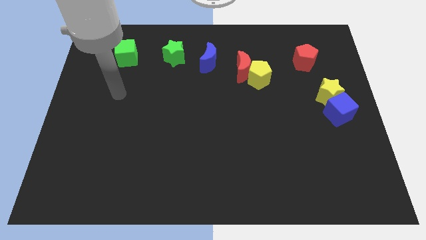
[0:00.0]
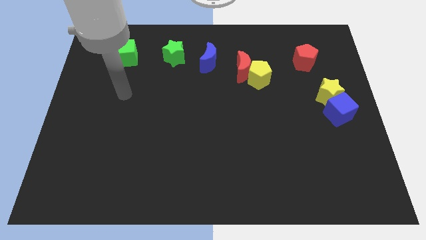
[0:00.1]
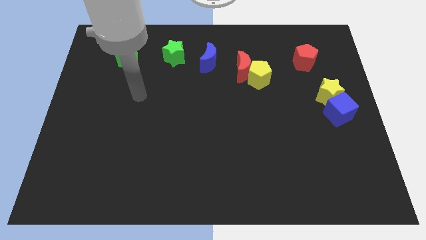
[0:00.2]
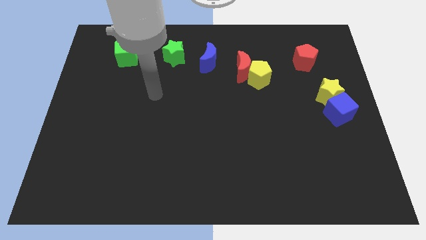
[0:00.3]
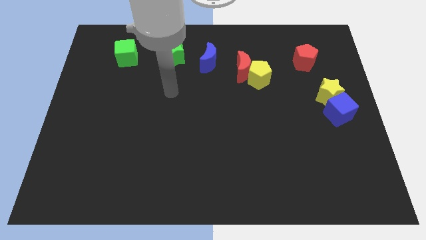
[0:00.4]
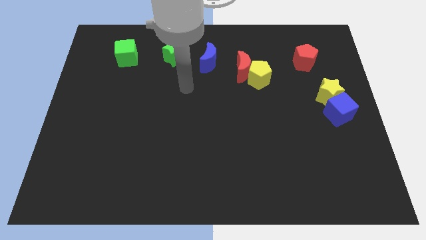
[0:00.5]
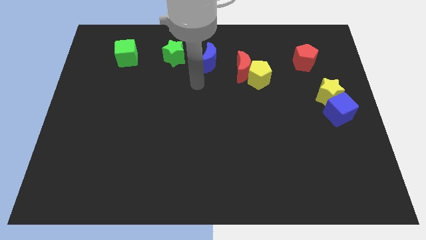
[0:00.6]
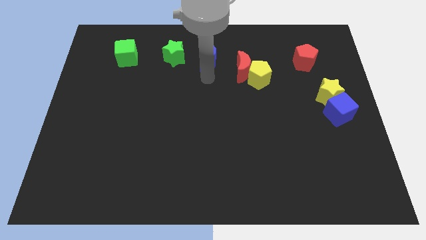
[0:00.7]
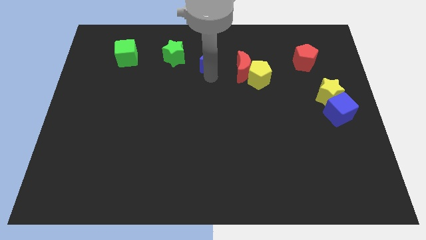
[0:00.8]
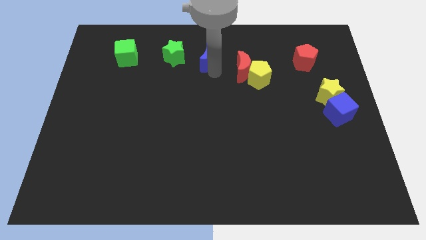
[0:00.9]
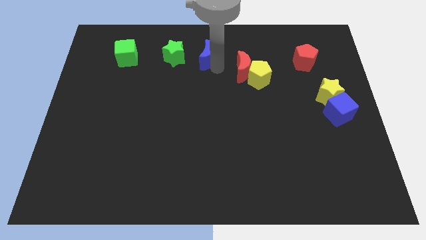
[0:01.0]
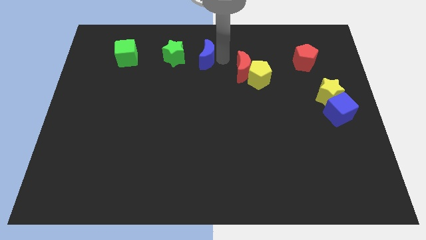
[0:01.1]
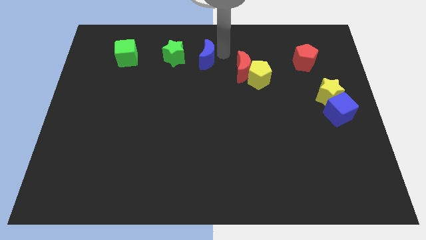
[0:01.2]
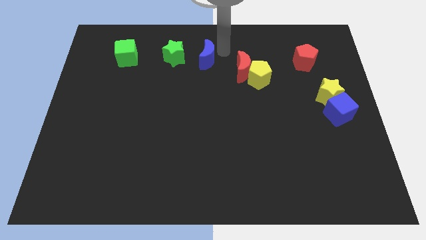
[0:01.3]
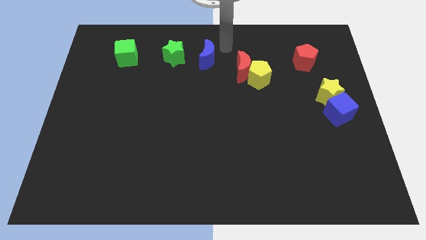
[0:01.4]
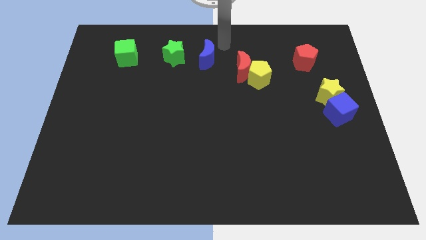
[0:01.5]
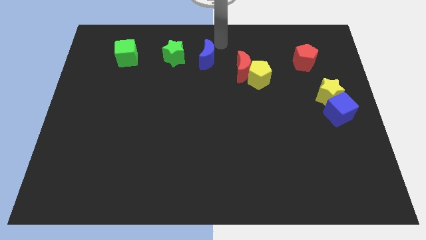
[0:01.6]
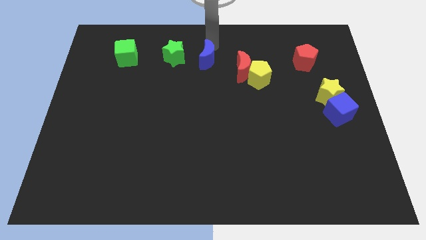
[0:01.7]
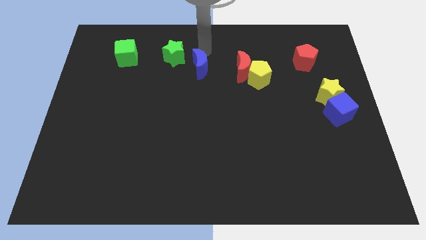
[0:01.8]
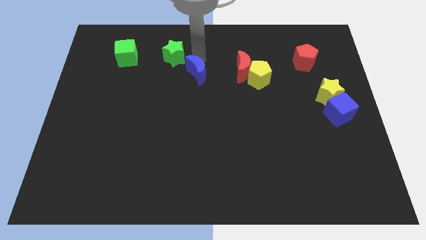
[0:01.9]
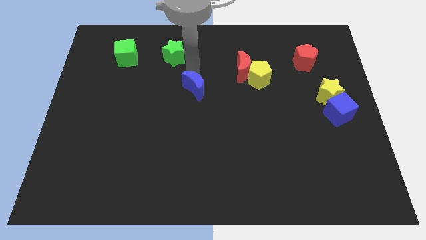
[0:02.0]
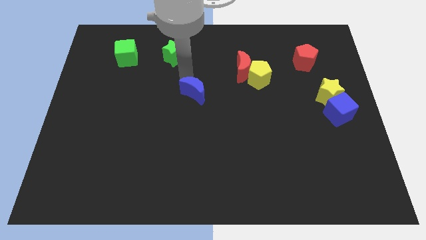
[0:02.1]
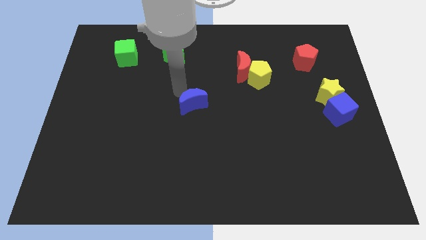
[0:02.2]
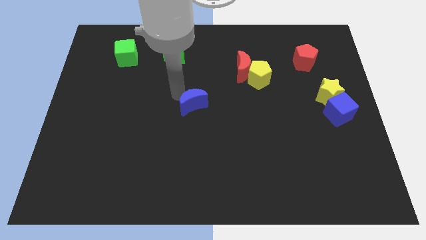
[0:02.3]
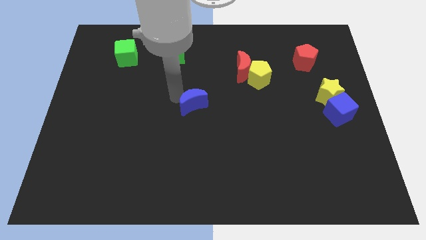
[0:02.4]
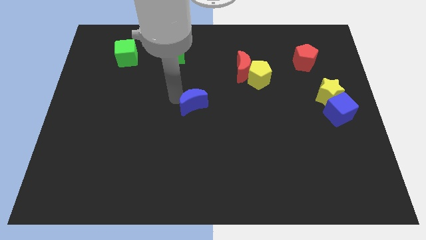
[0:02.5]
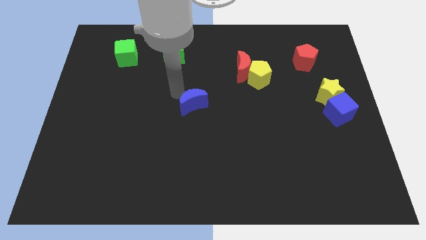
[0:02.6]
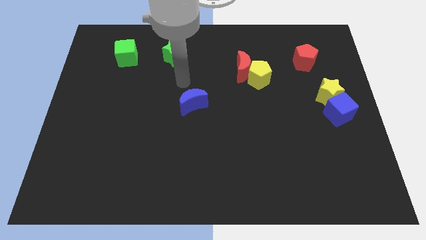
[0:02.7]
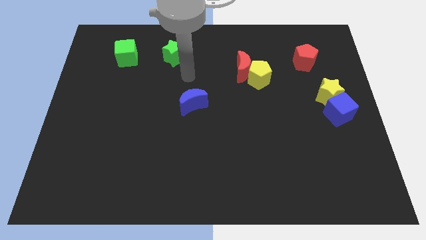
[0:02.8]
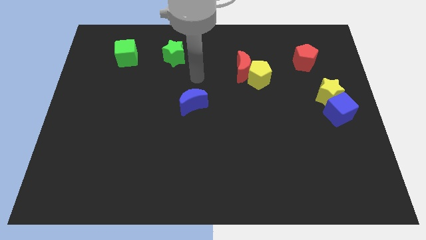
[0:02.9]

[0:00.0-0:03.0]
push the blue moon downward

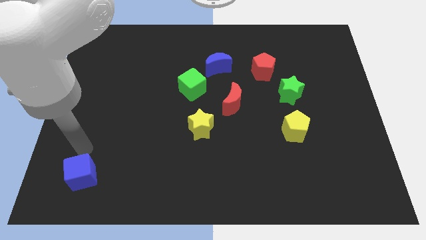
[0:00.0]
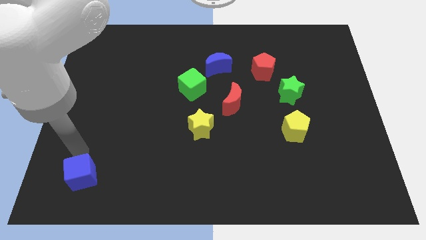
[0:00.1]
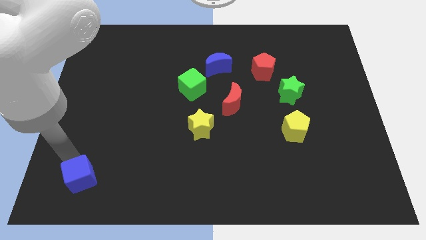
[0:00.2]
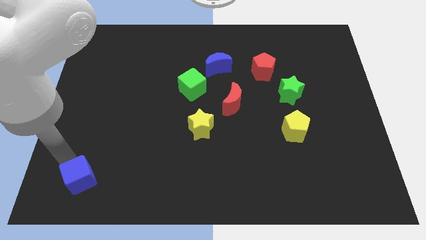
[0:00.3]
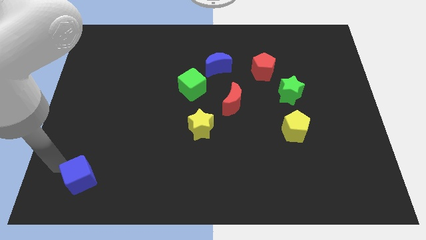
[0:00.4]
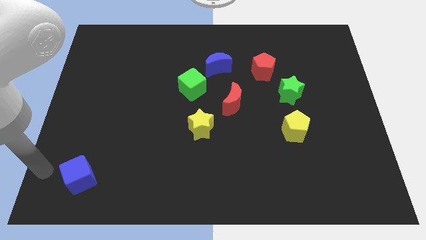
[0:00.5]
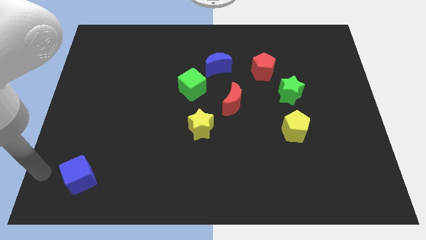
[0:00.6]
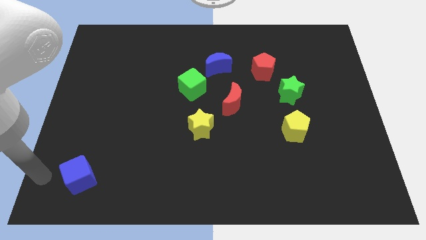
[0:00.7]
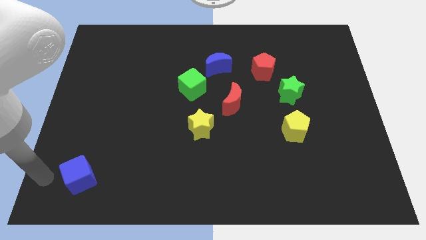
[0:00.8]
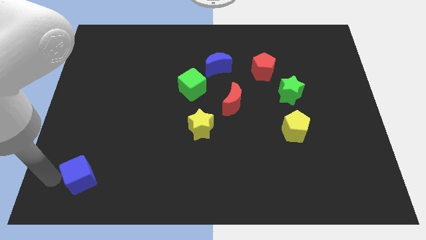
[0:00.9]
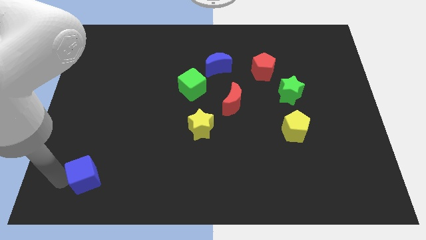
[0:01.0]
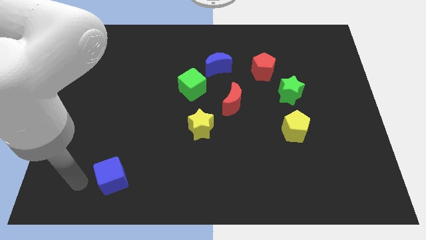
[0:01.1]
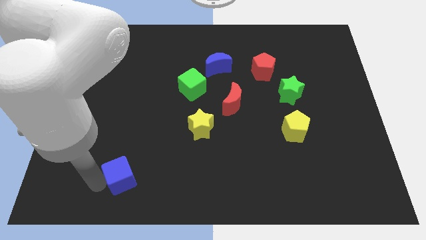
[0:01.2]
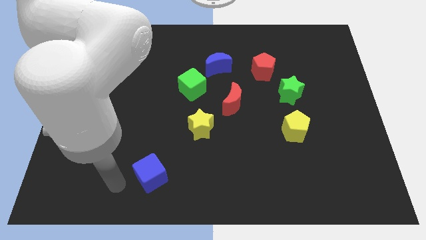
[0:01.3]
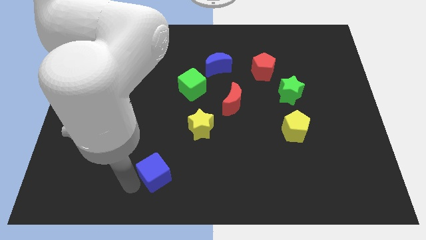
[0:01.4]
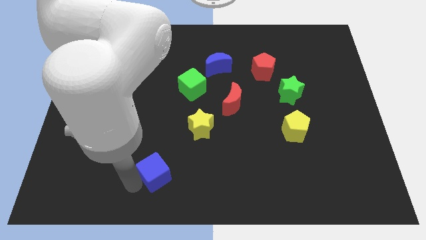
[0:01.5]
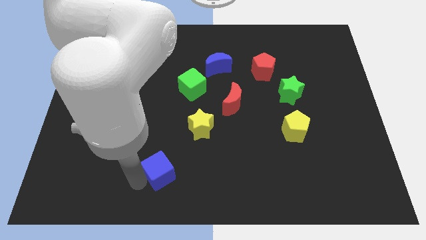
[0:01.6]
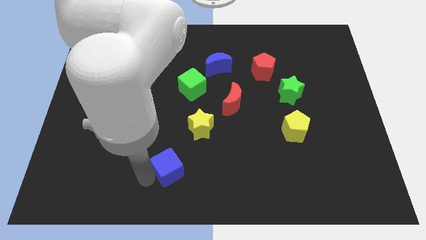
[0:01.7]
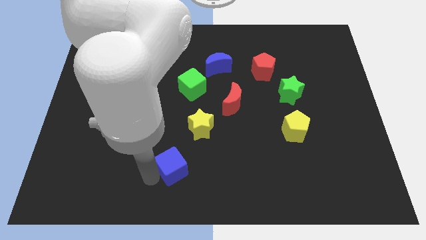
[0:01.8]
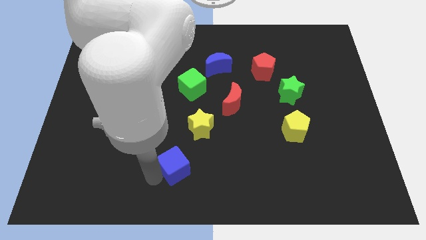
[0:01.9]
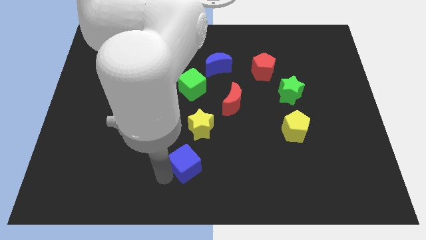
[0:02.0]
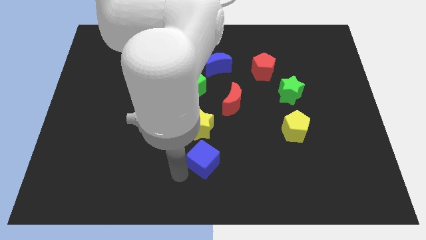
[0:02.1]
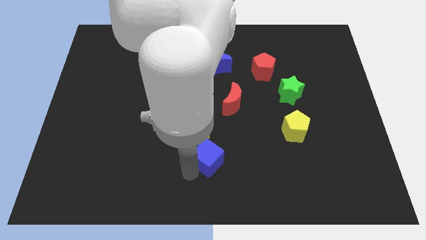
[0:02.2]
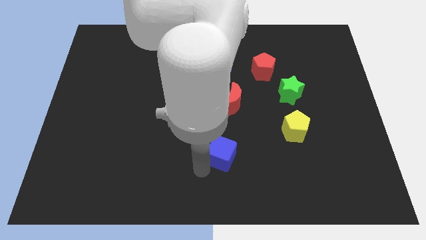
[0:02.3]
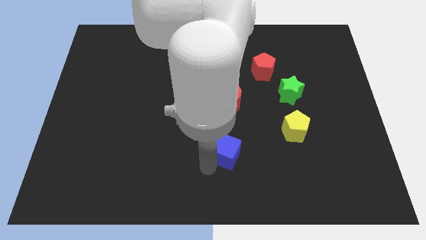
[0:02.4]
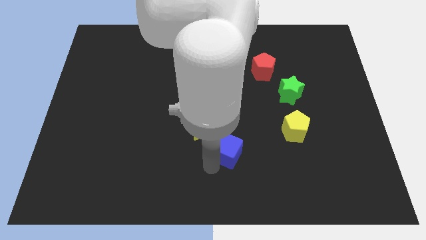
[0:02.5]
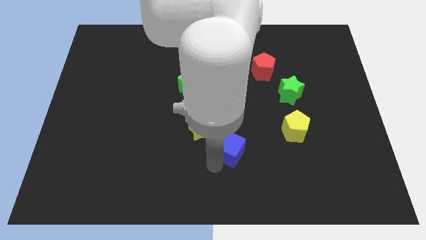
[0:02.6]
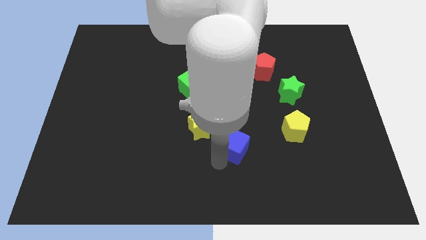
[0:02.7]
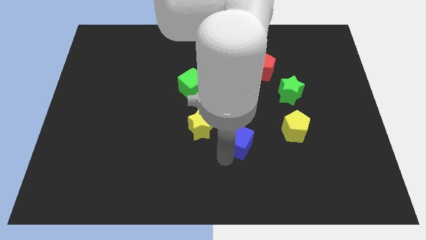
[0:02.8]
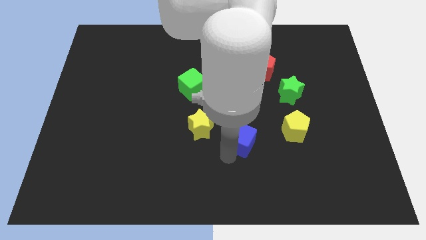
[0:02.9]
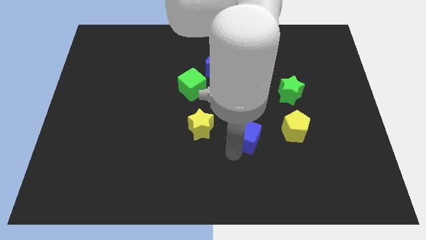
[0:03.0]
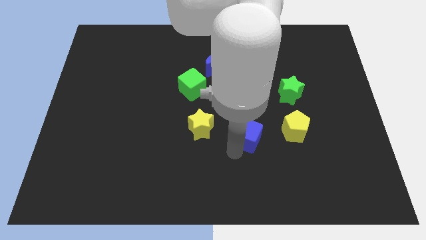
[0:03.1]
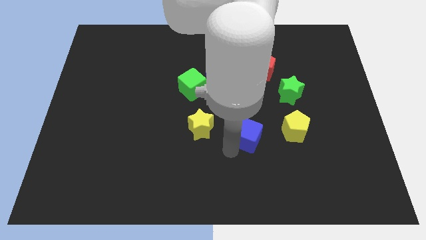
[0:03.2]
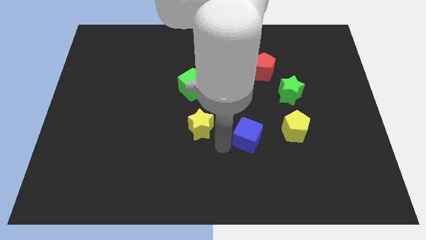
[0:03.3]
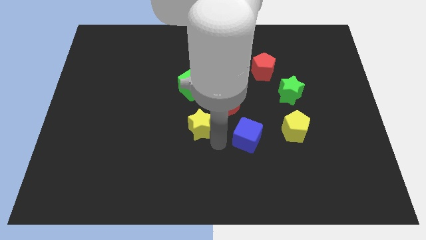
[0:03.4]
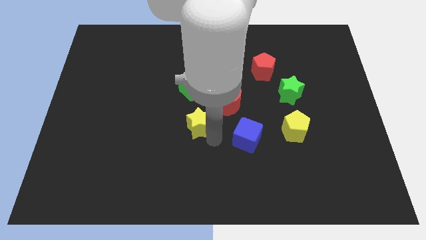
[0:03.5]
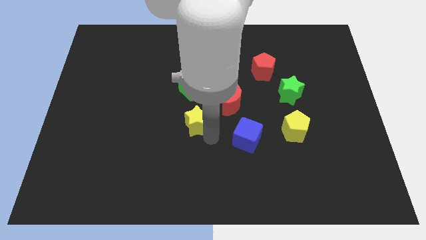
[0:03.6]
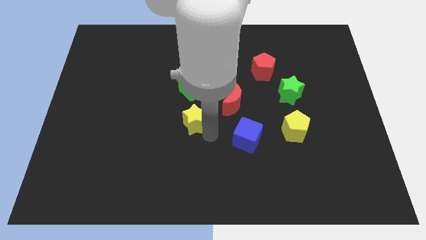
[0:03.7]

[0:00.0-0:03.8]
place blue cube in between yellow star and yellow pentagon

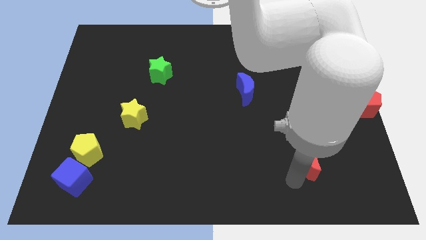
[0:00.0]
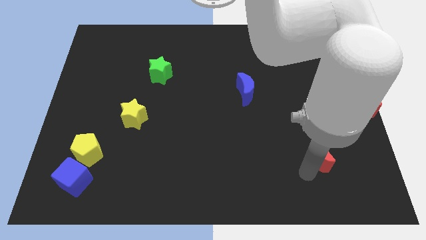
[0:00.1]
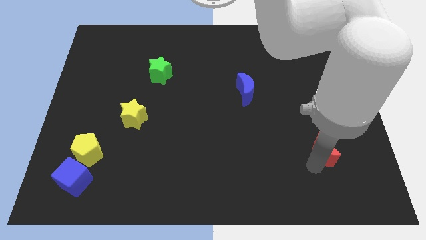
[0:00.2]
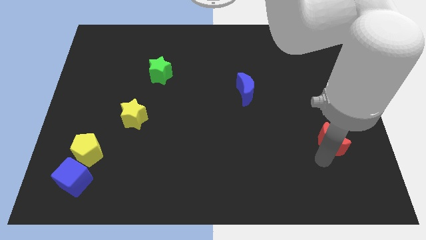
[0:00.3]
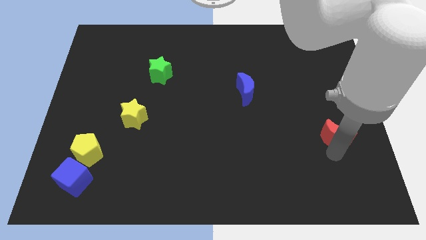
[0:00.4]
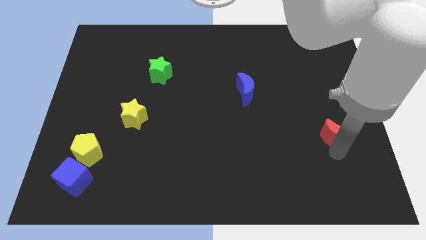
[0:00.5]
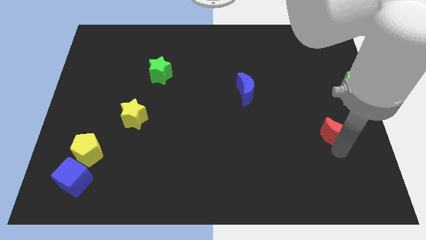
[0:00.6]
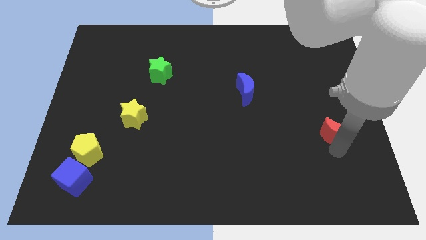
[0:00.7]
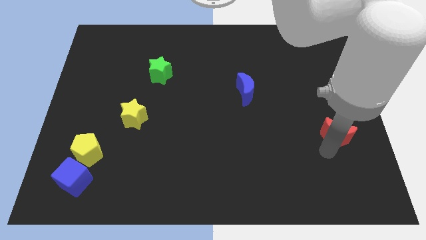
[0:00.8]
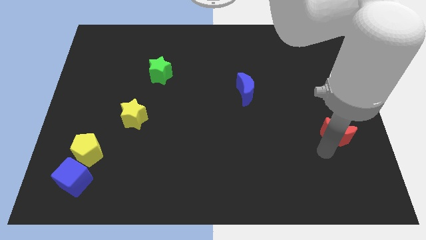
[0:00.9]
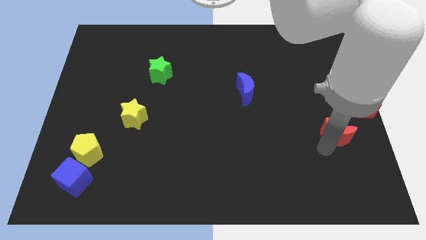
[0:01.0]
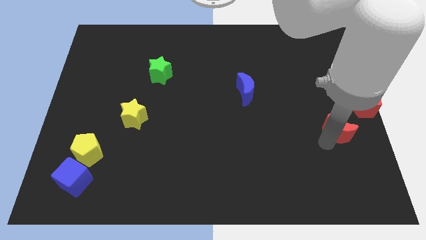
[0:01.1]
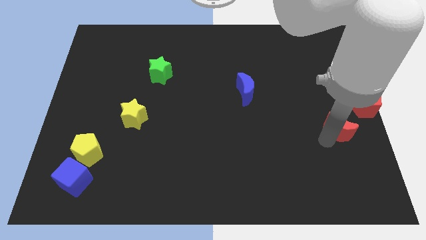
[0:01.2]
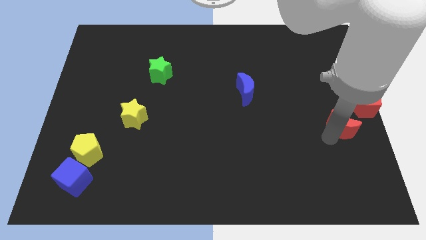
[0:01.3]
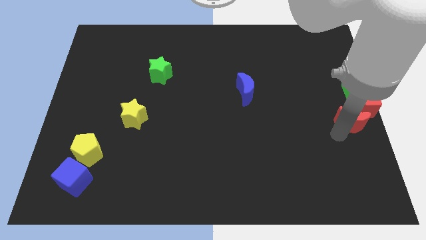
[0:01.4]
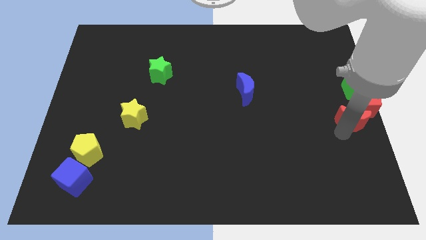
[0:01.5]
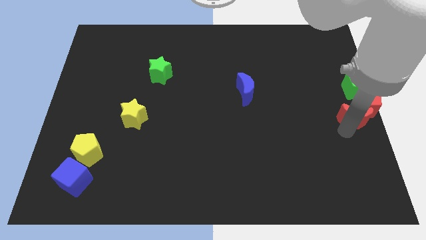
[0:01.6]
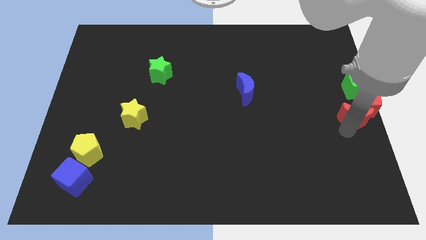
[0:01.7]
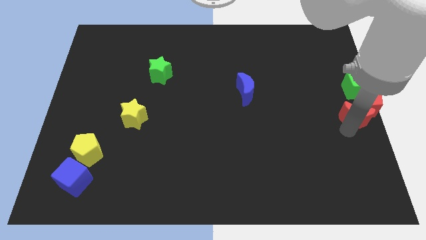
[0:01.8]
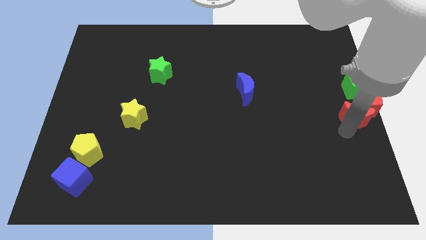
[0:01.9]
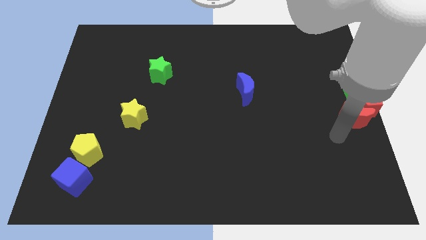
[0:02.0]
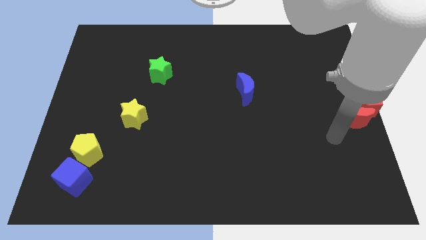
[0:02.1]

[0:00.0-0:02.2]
place the red moon below the red pentagon
